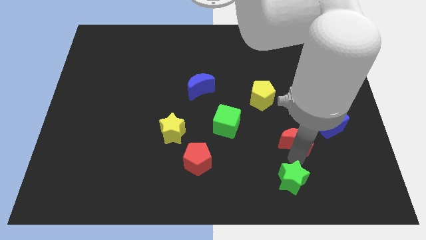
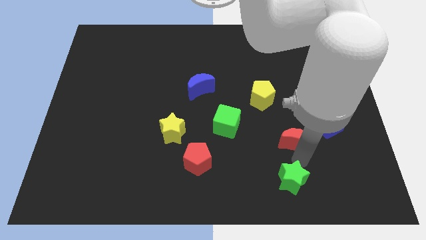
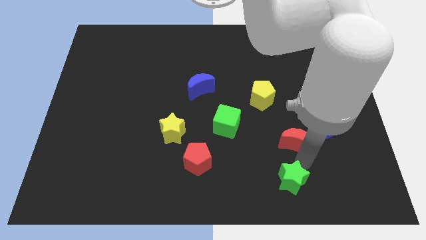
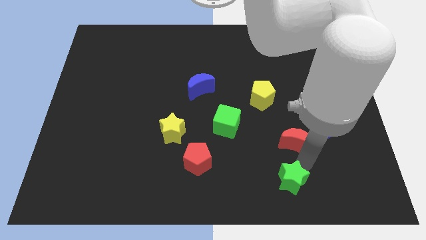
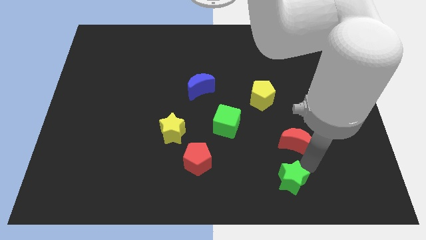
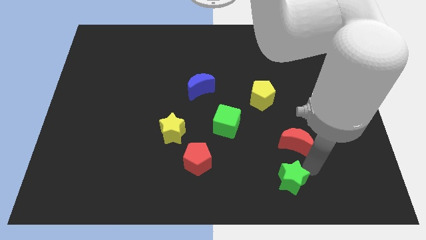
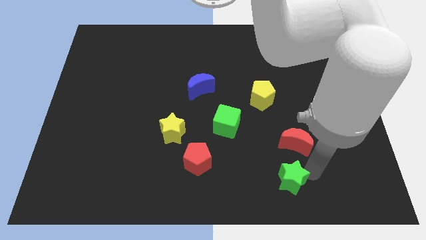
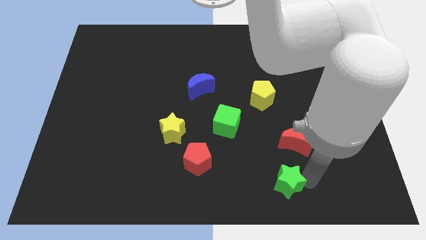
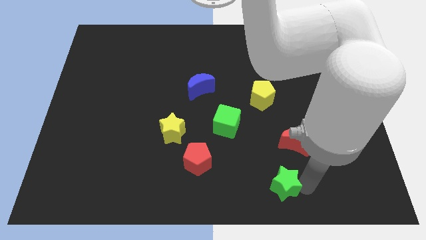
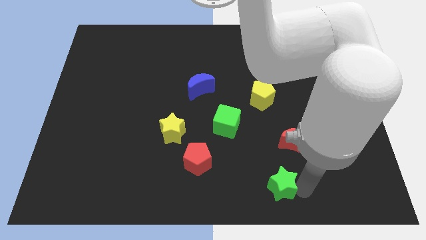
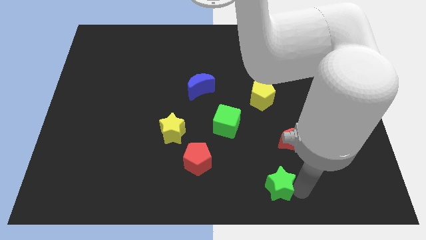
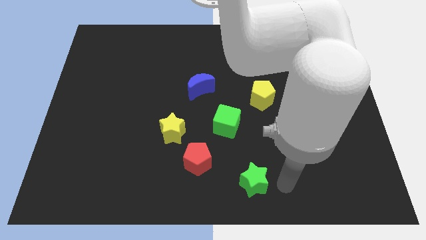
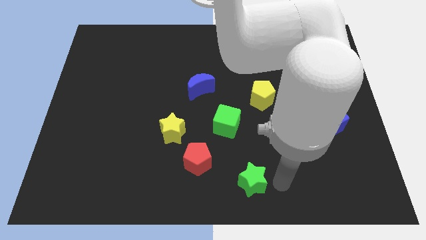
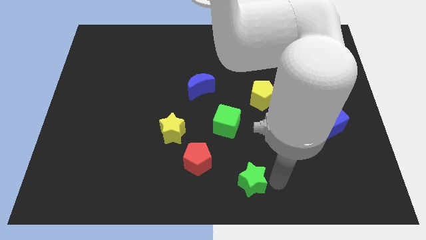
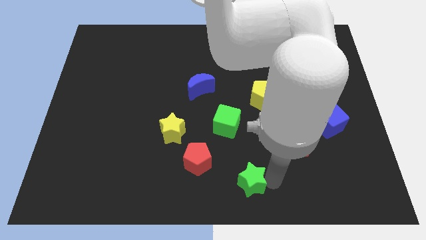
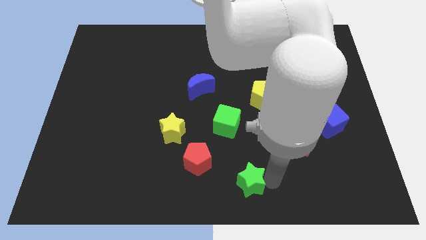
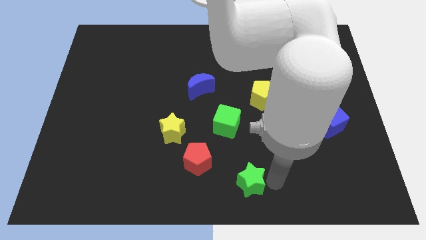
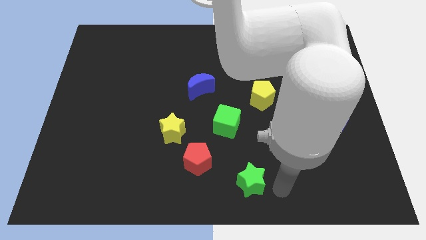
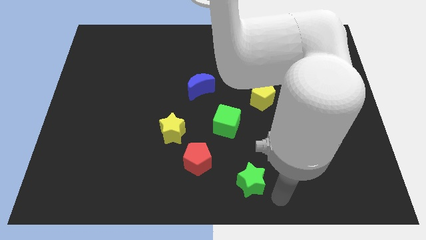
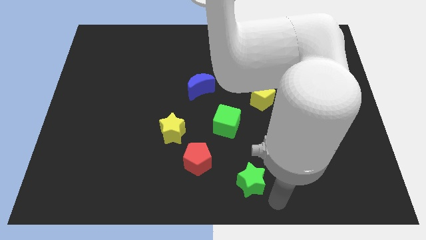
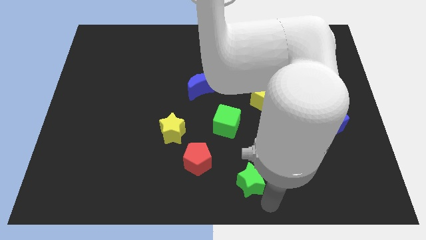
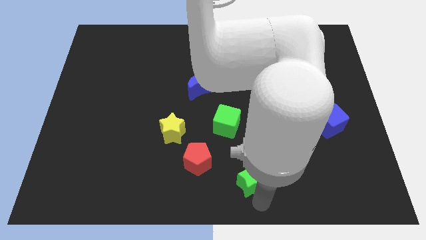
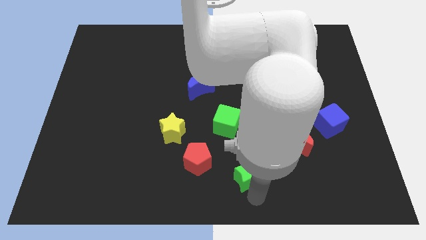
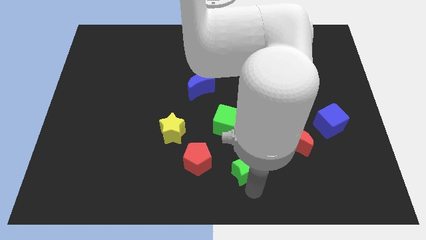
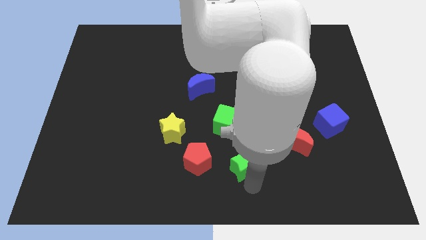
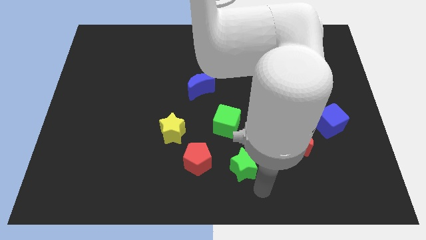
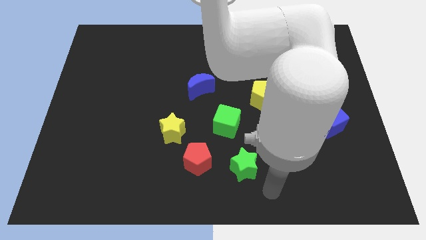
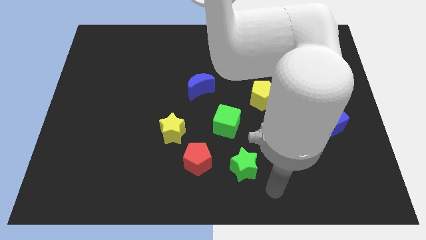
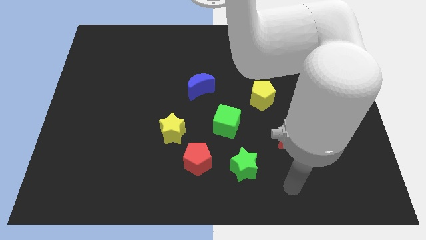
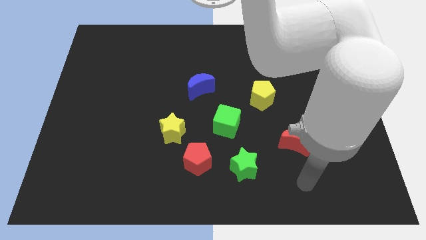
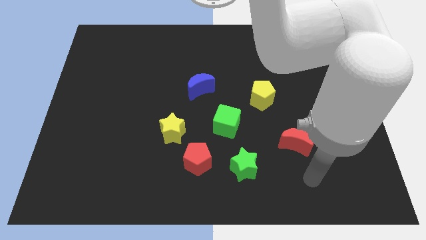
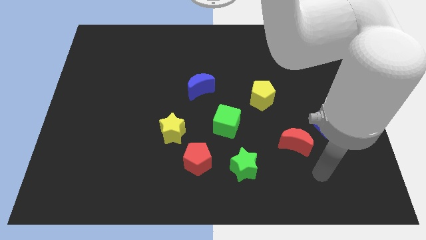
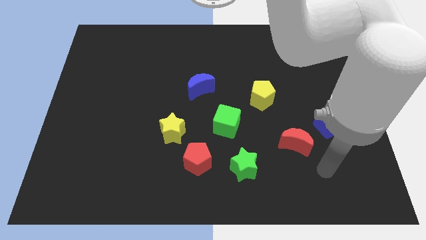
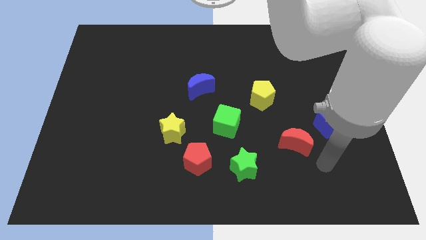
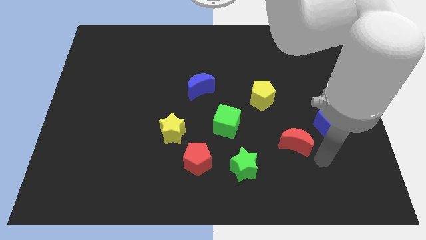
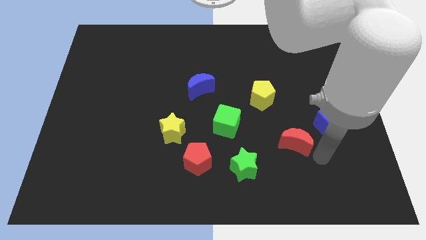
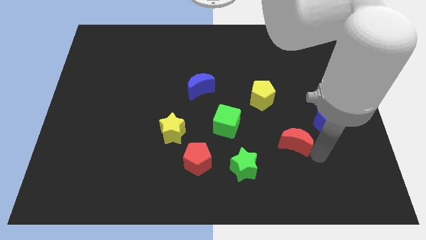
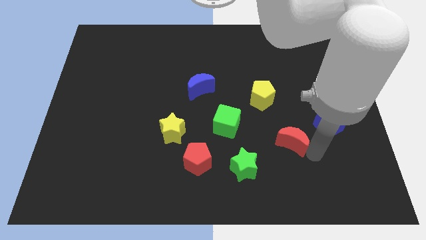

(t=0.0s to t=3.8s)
move the green star to the left of red pentagon

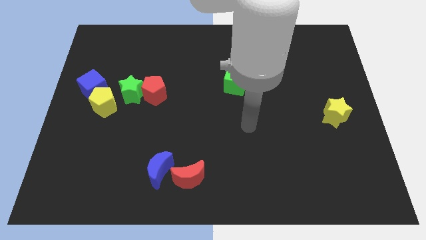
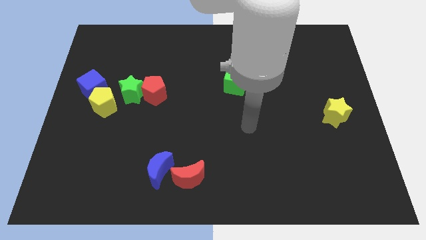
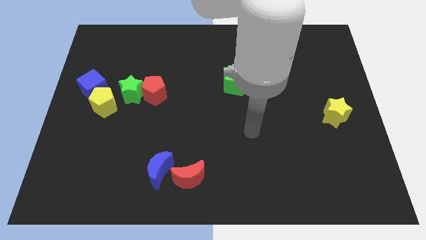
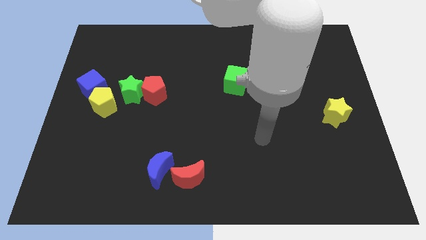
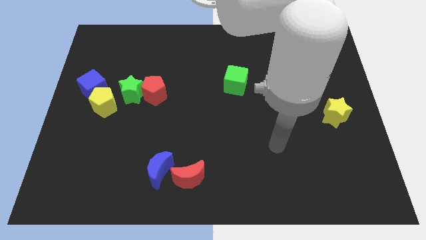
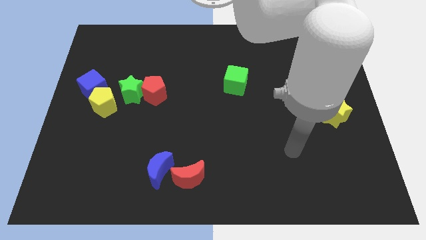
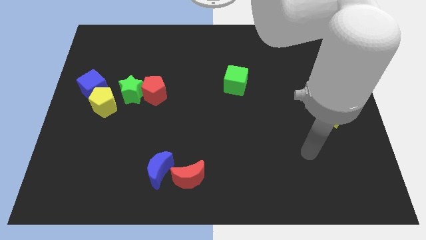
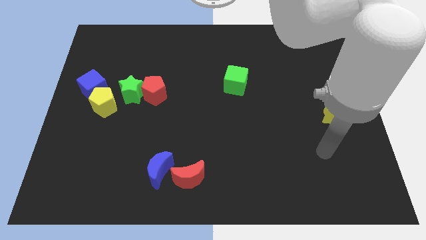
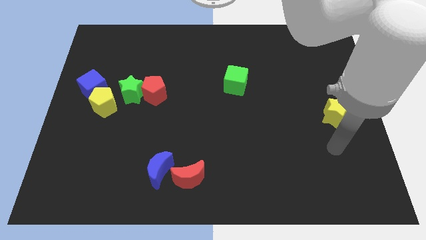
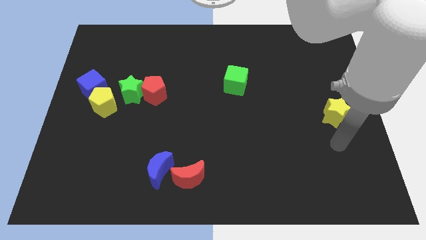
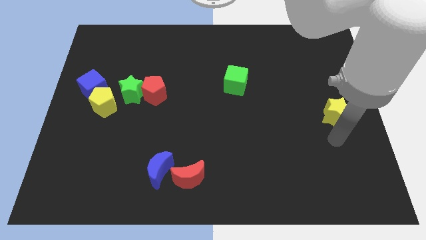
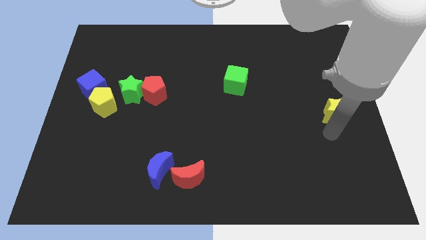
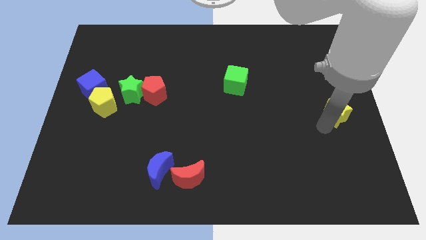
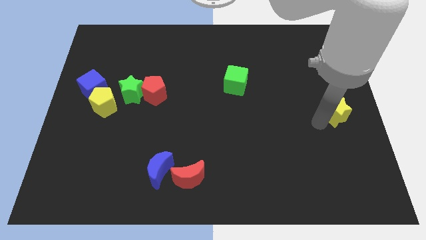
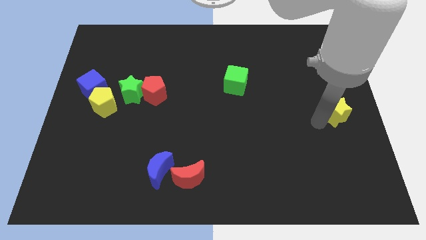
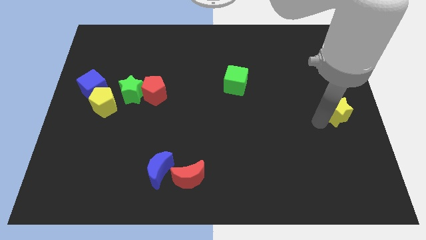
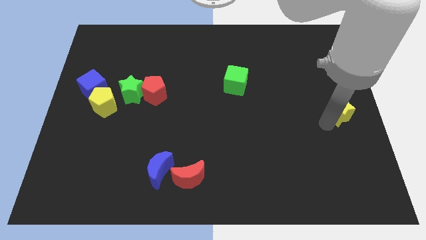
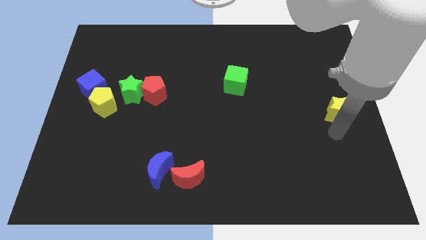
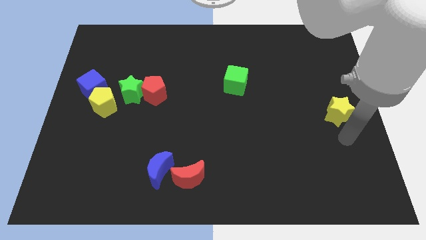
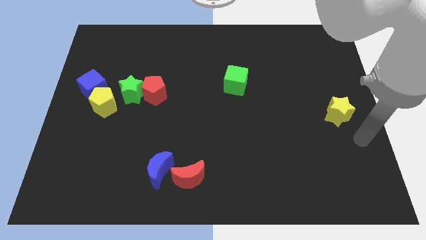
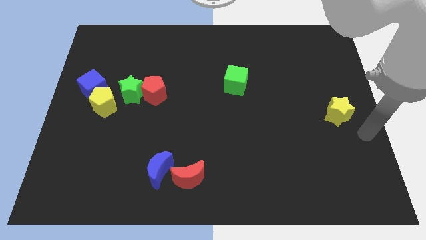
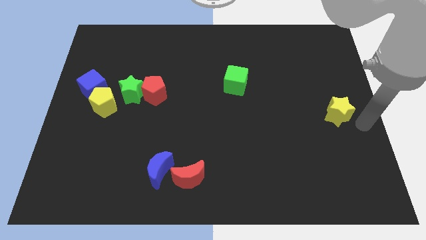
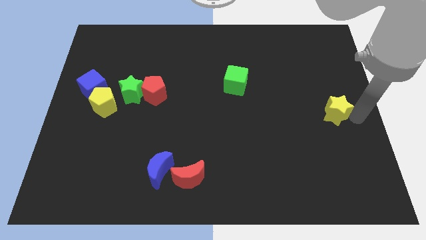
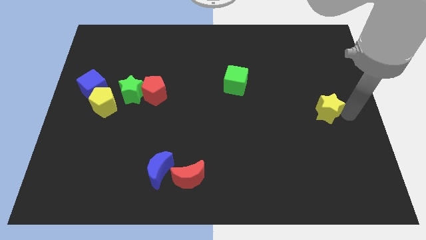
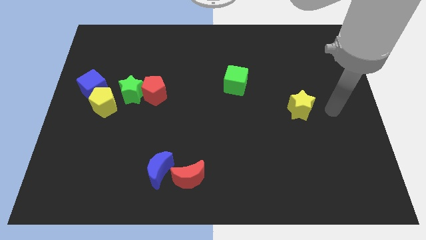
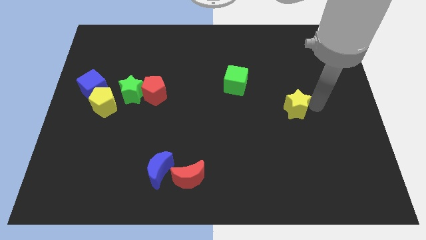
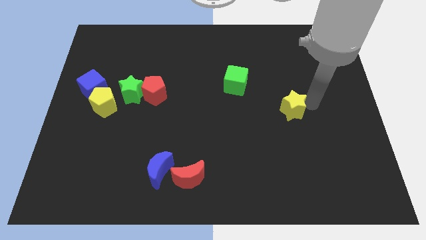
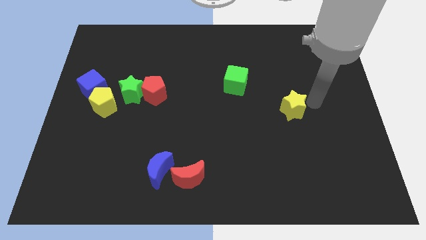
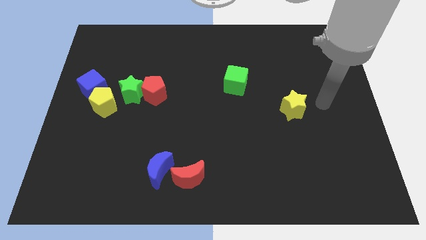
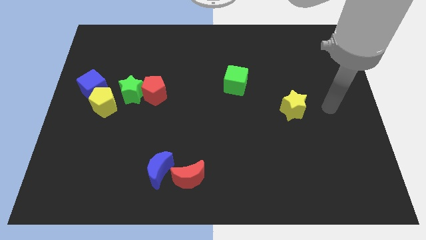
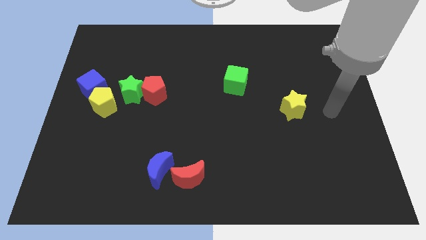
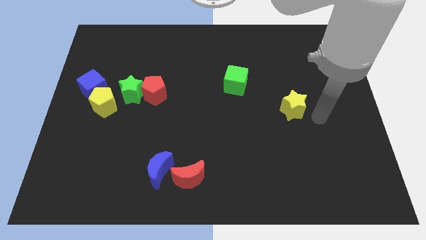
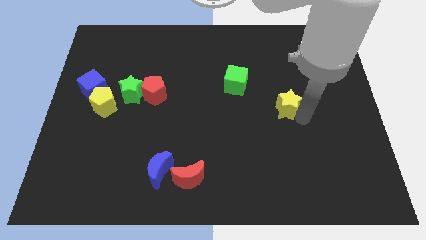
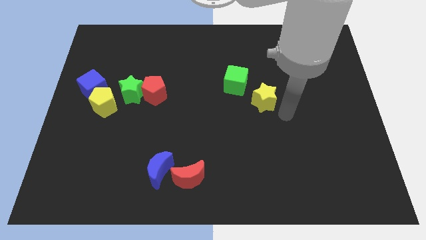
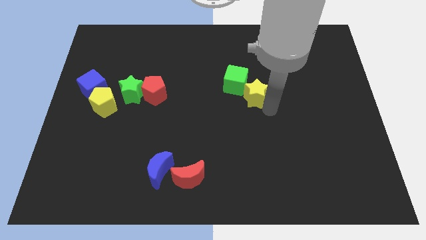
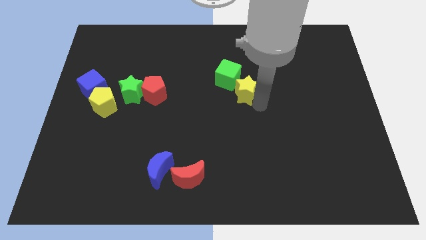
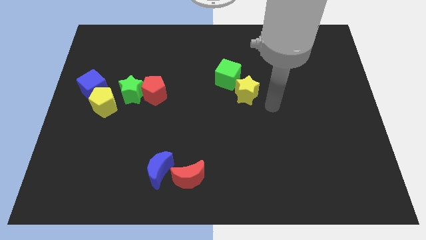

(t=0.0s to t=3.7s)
push the yellow star into the bottom of the green cube

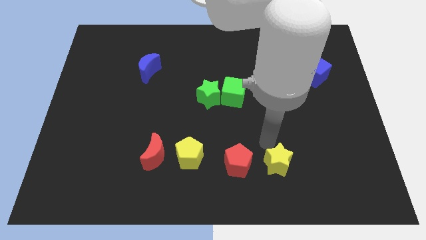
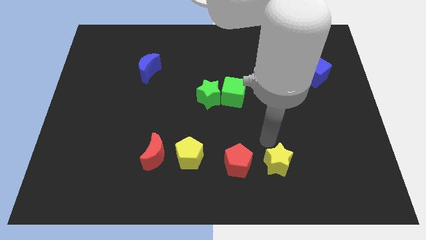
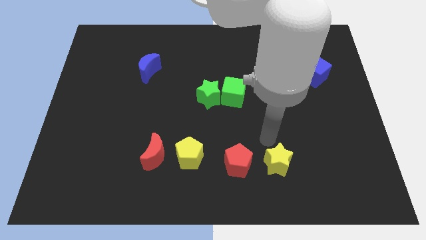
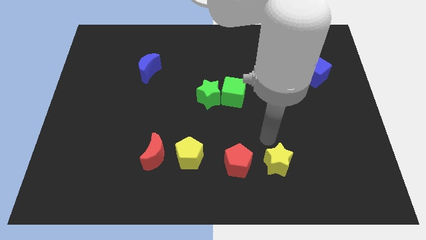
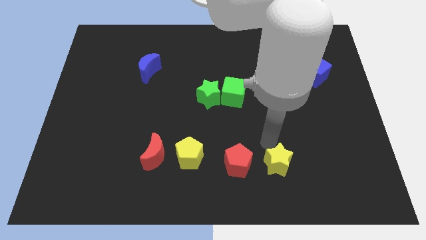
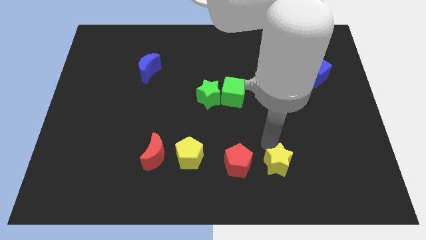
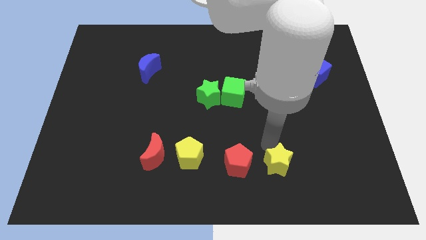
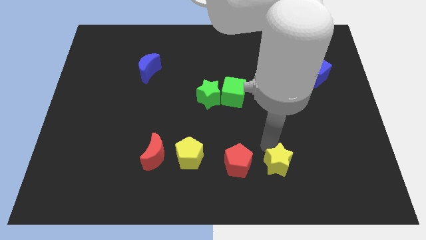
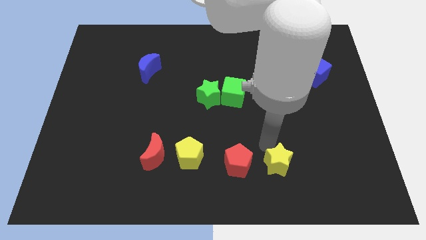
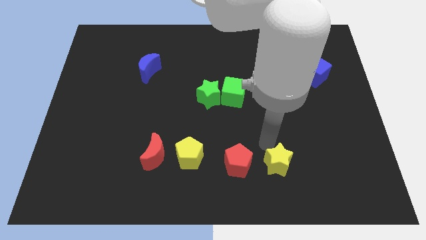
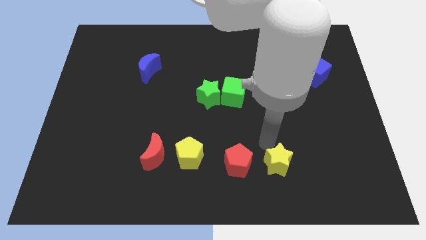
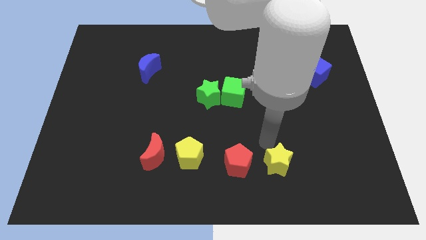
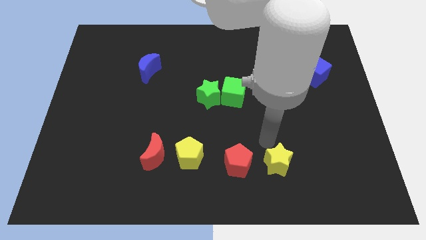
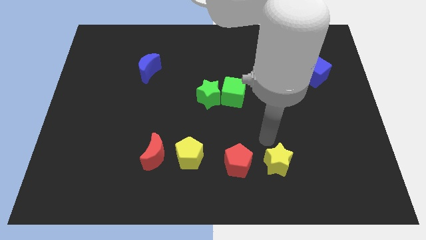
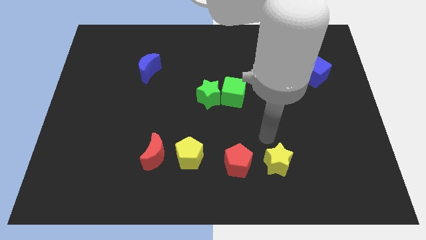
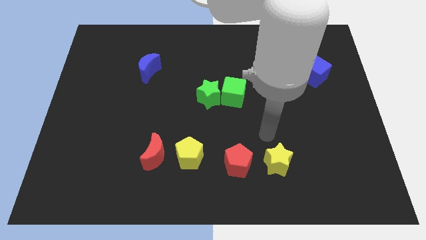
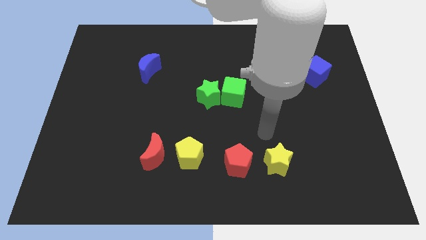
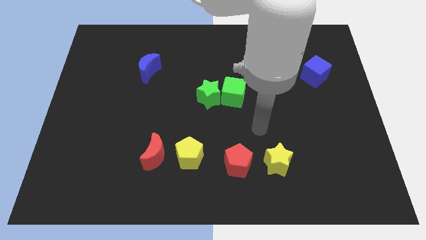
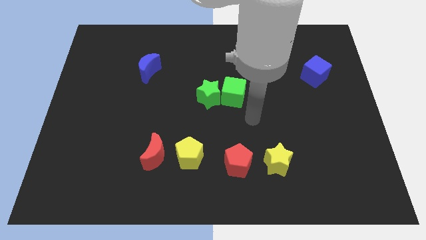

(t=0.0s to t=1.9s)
move your arm away from the yellow star
